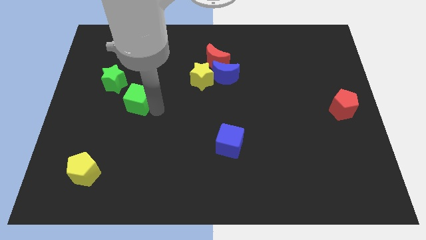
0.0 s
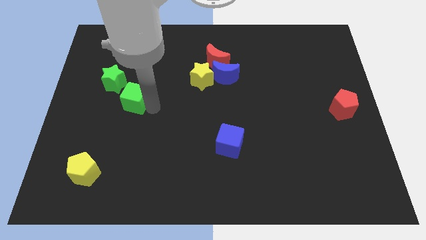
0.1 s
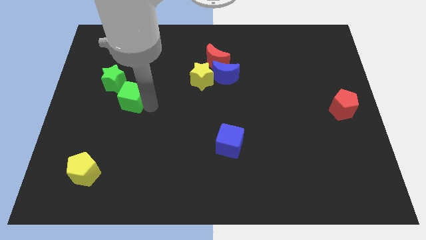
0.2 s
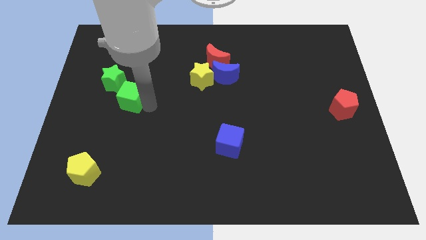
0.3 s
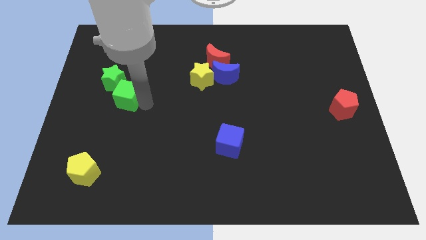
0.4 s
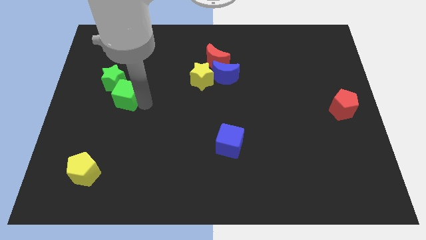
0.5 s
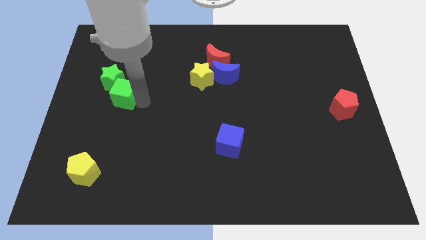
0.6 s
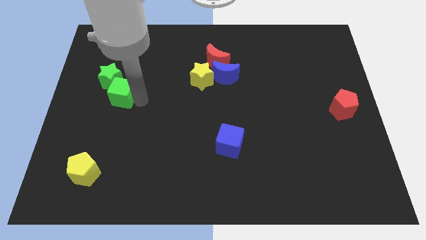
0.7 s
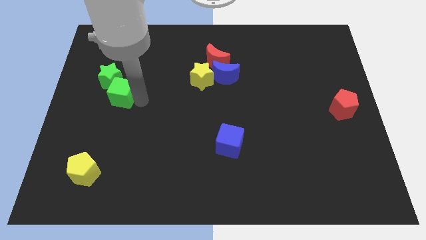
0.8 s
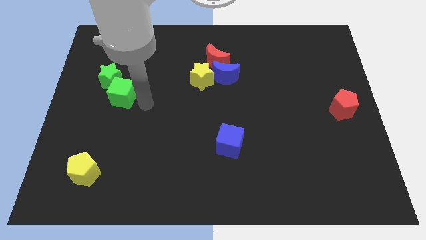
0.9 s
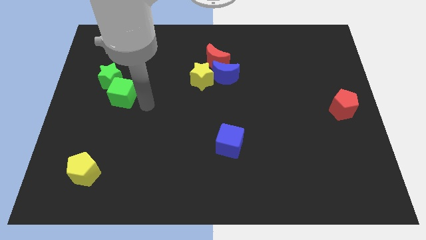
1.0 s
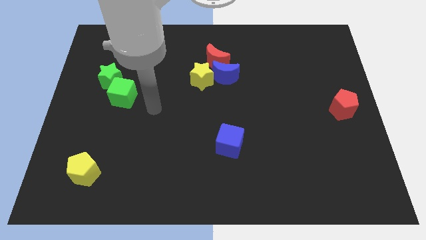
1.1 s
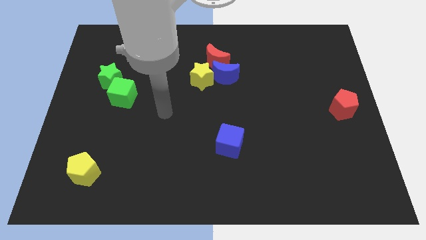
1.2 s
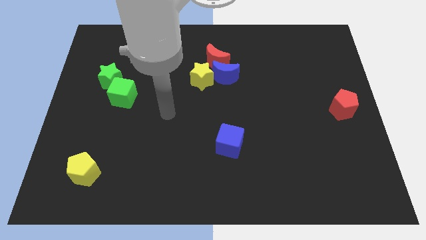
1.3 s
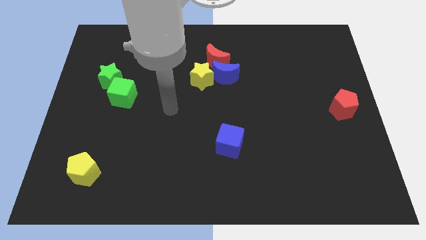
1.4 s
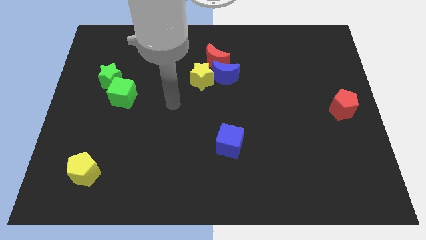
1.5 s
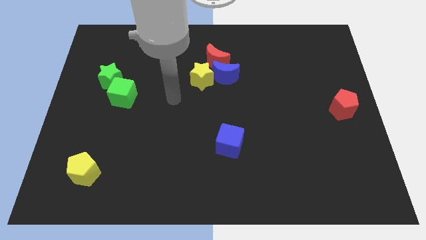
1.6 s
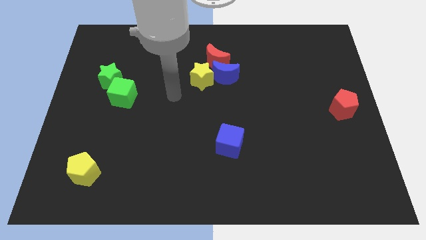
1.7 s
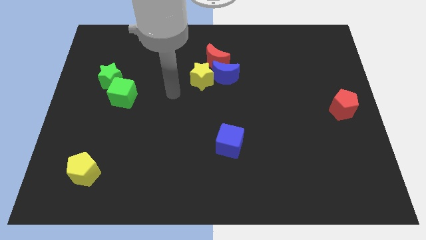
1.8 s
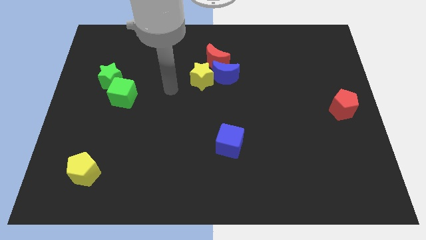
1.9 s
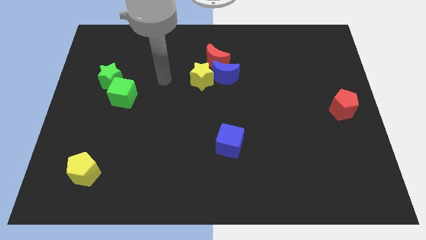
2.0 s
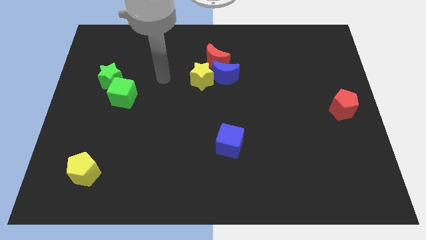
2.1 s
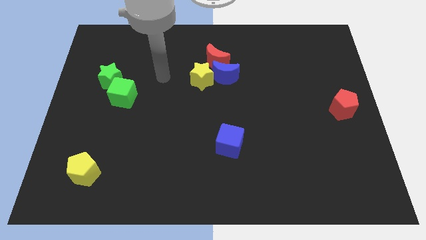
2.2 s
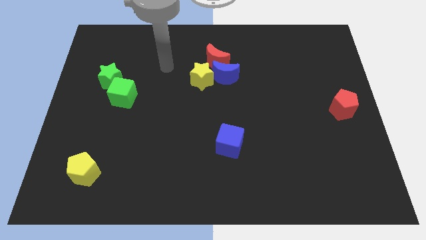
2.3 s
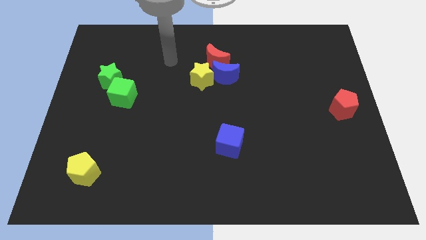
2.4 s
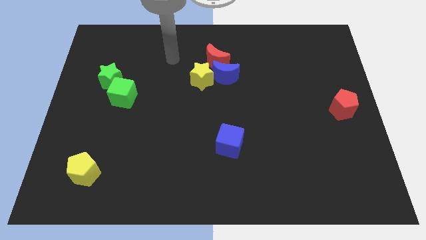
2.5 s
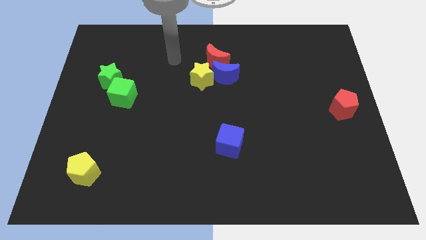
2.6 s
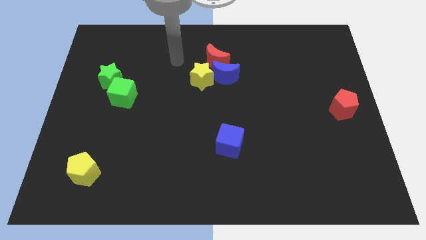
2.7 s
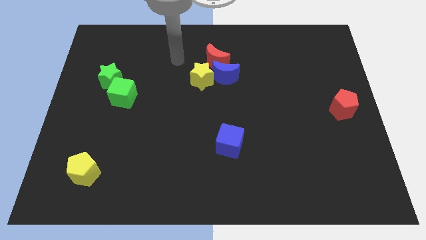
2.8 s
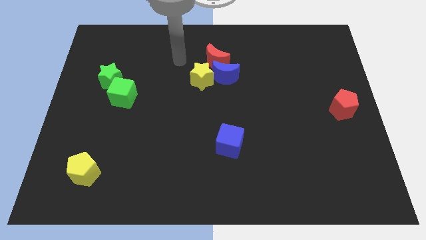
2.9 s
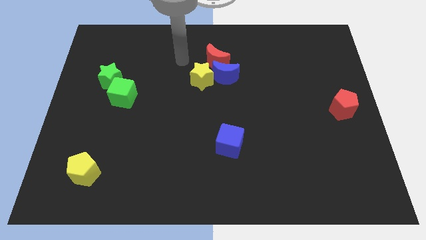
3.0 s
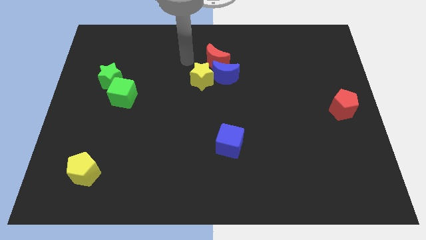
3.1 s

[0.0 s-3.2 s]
push the green cube into the green star

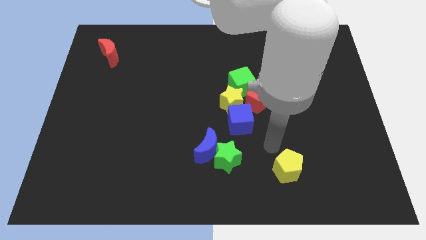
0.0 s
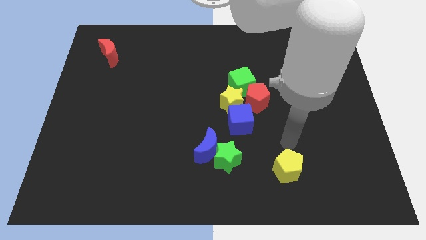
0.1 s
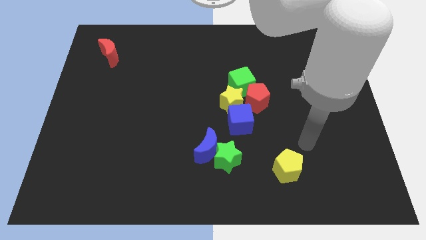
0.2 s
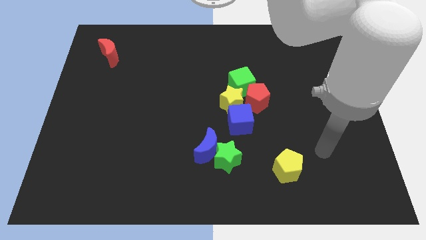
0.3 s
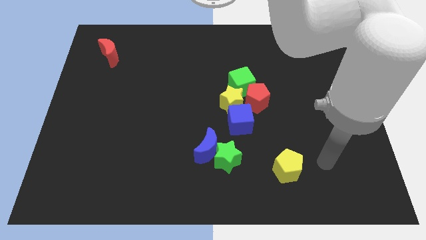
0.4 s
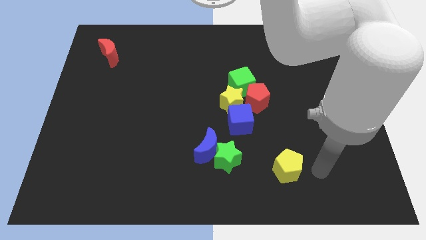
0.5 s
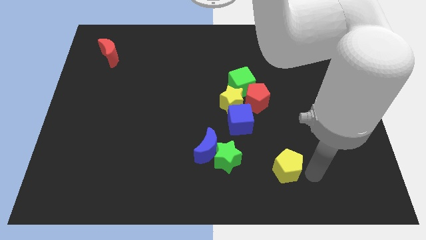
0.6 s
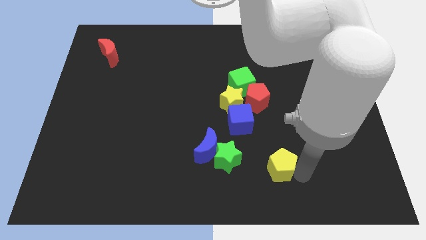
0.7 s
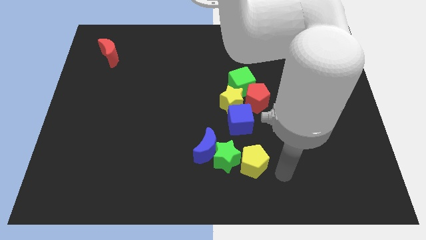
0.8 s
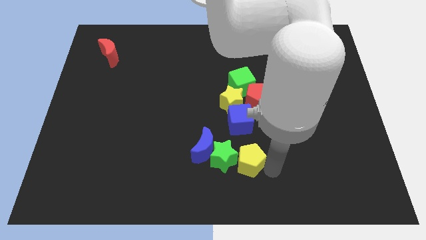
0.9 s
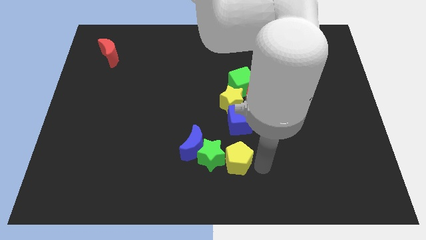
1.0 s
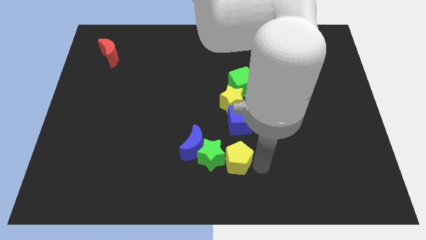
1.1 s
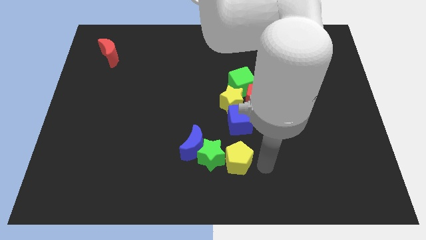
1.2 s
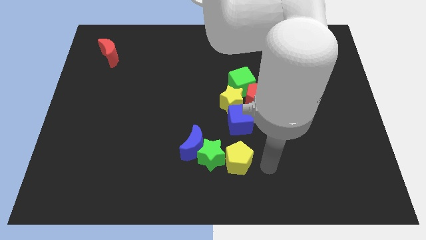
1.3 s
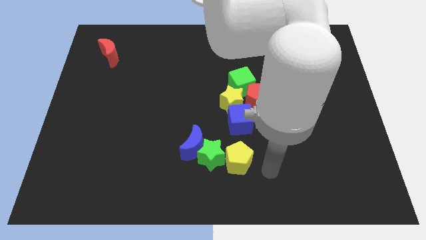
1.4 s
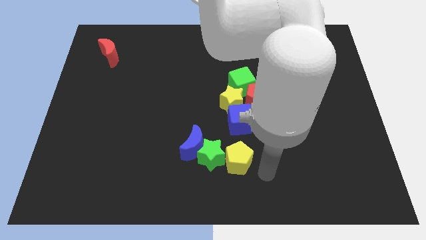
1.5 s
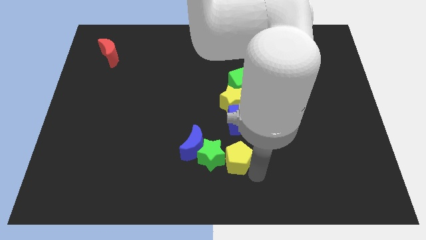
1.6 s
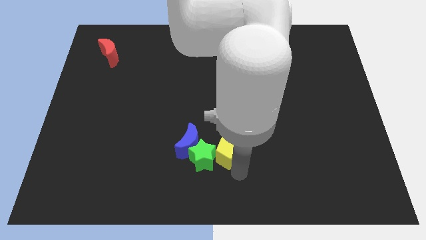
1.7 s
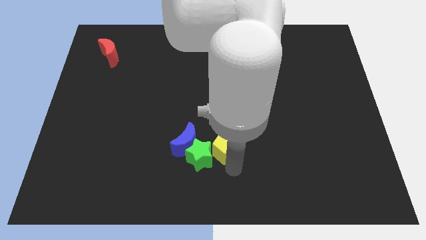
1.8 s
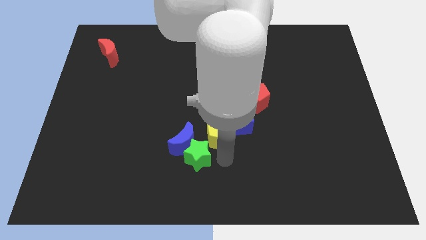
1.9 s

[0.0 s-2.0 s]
push yellow pentagon close to the green star and blue moon

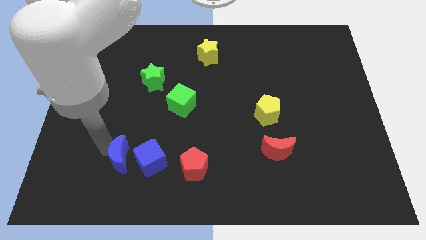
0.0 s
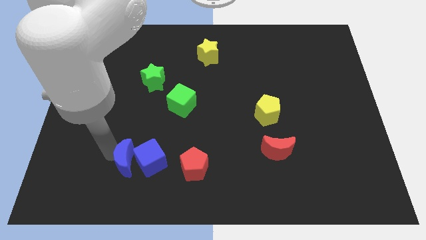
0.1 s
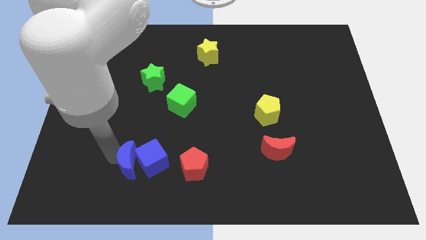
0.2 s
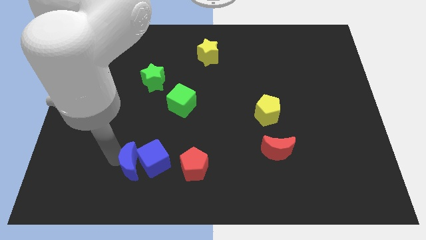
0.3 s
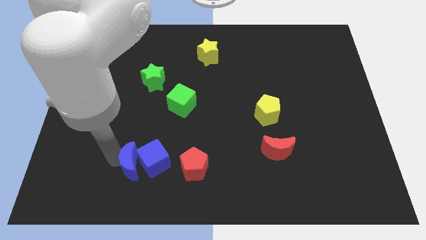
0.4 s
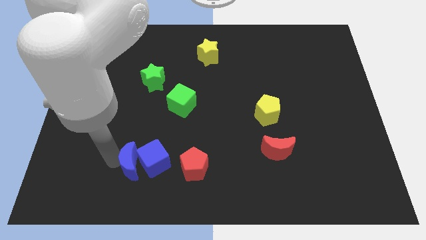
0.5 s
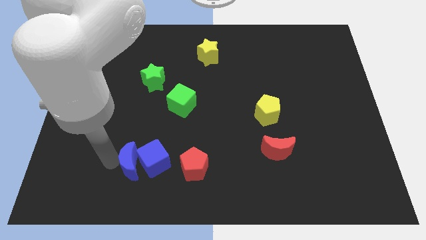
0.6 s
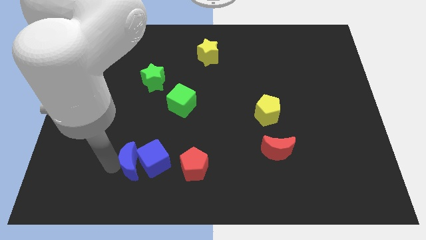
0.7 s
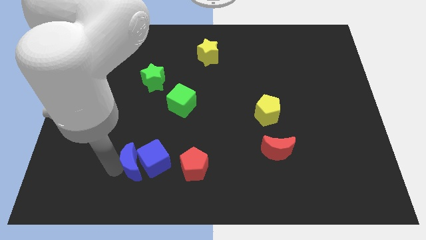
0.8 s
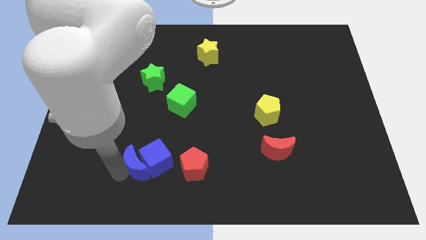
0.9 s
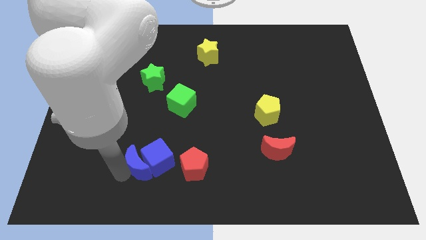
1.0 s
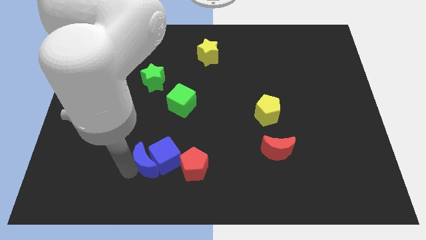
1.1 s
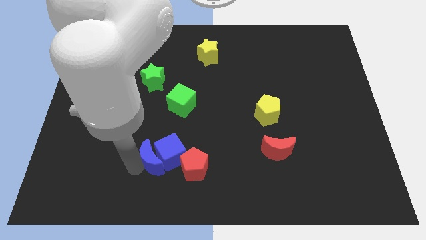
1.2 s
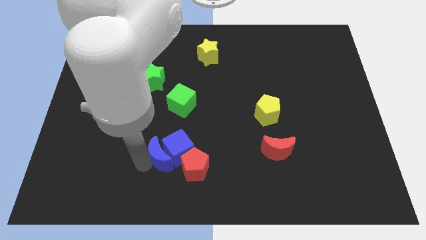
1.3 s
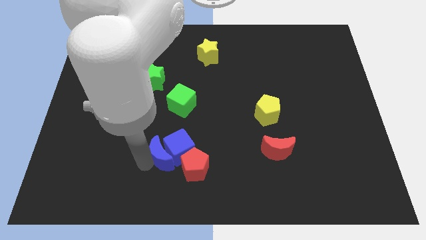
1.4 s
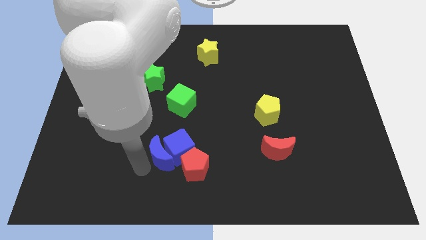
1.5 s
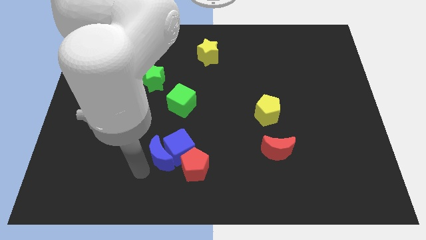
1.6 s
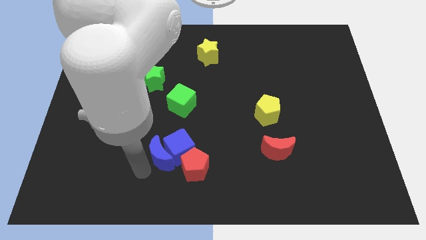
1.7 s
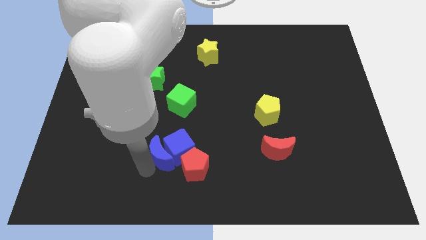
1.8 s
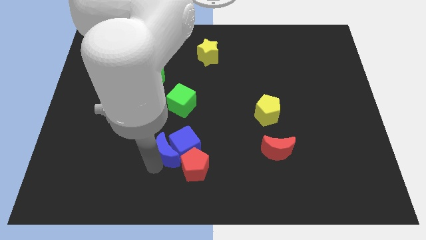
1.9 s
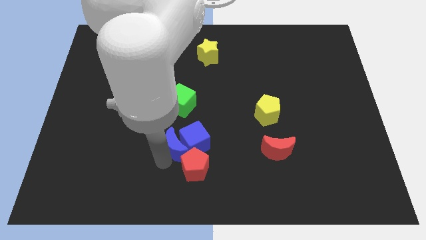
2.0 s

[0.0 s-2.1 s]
move the blue crescent into the blue cube to the center of the board

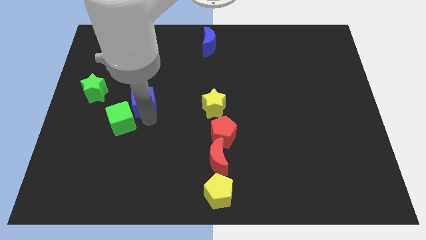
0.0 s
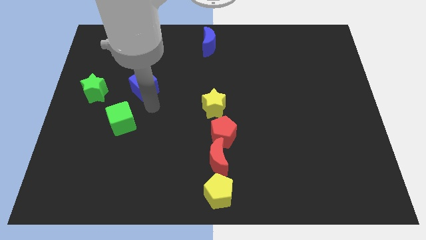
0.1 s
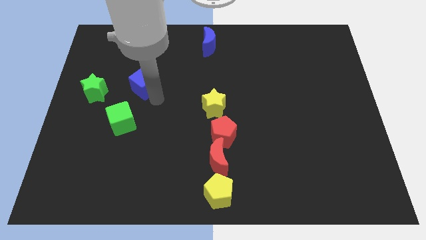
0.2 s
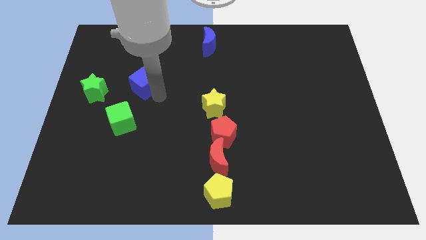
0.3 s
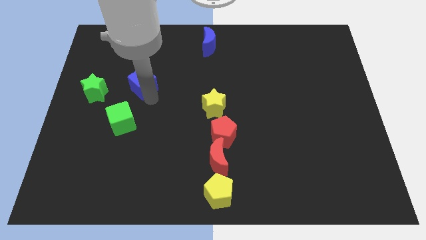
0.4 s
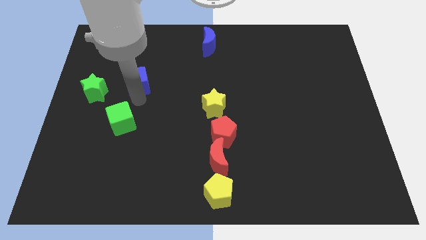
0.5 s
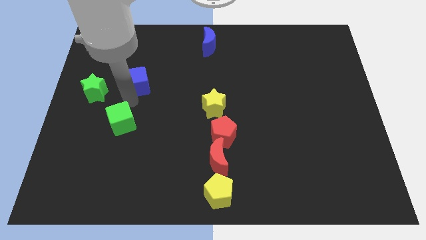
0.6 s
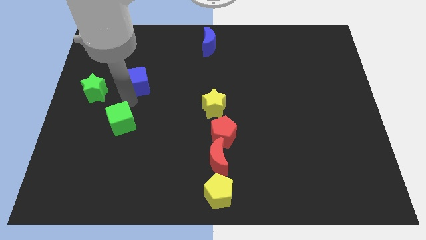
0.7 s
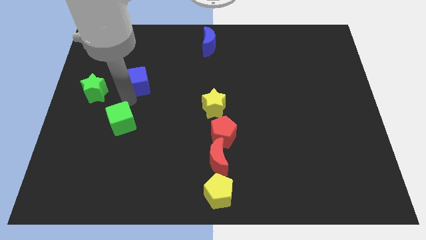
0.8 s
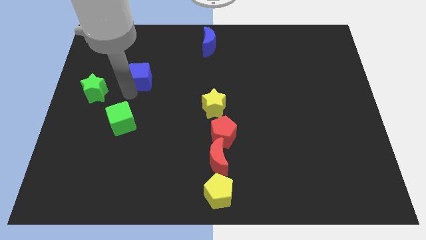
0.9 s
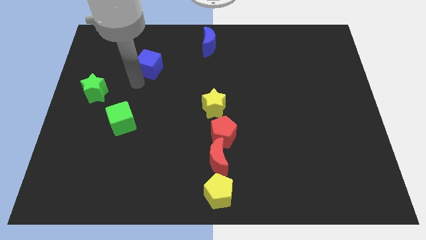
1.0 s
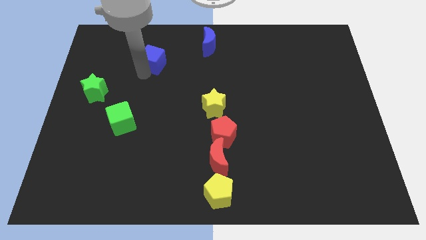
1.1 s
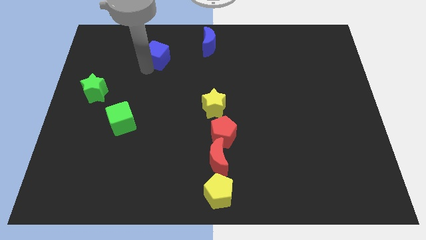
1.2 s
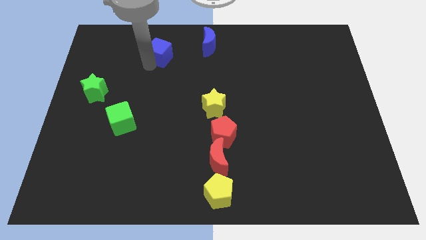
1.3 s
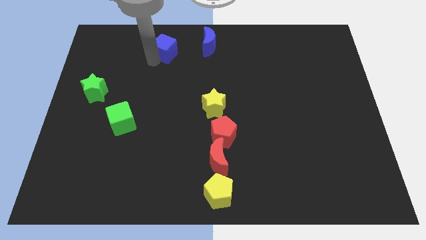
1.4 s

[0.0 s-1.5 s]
drag blue cube slightly to the top

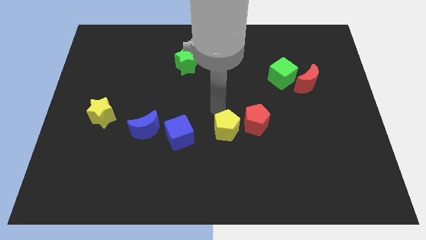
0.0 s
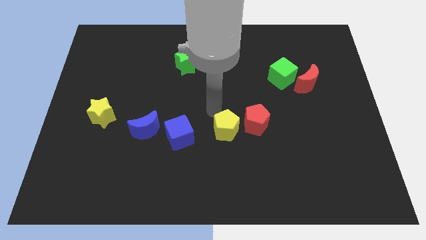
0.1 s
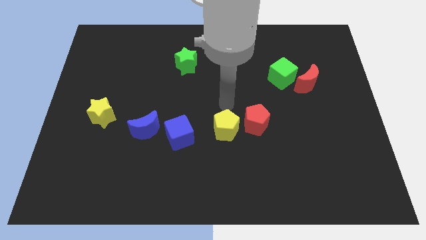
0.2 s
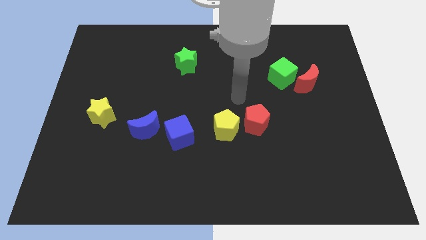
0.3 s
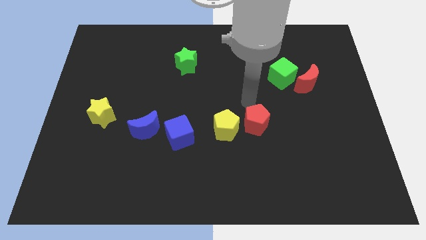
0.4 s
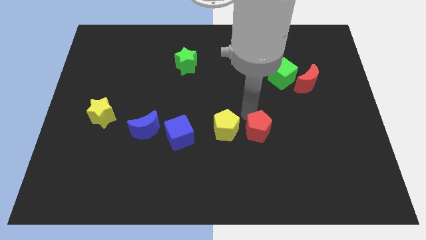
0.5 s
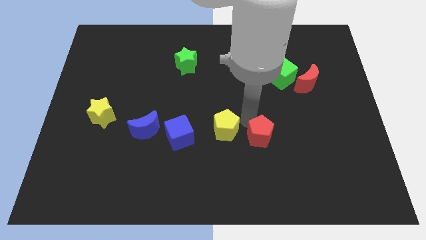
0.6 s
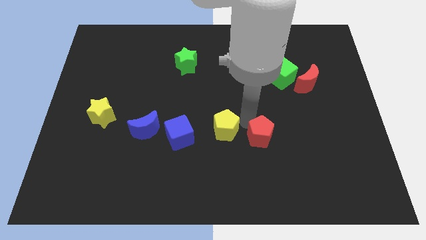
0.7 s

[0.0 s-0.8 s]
push red pentagon slightly downwards
